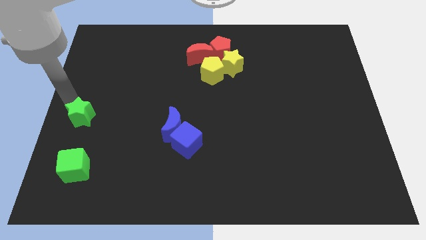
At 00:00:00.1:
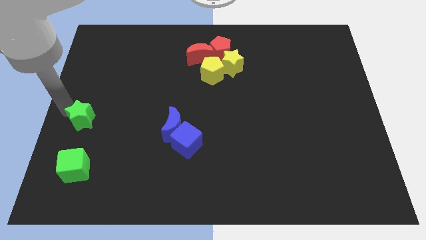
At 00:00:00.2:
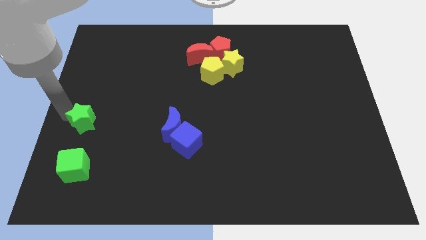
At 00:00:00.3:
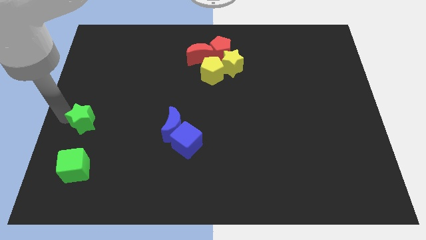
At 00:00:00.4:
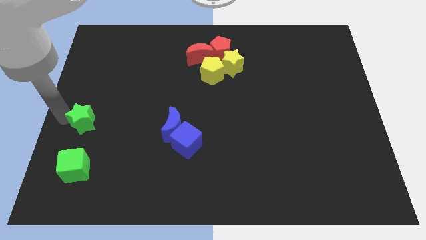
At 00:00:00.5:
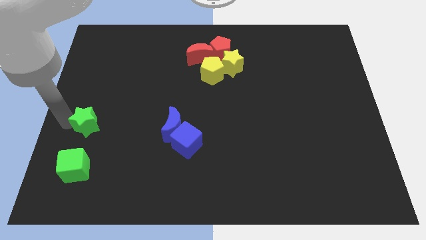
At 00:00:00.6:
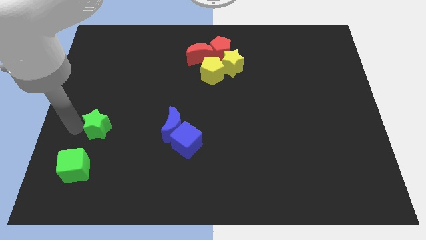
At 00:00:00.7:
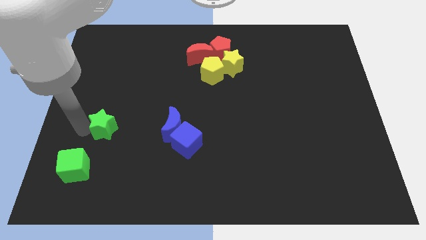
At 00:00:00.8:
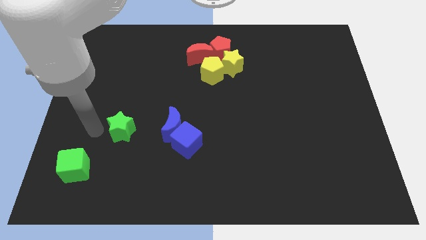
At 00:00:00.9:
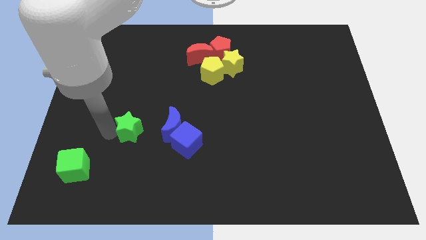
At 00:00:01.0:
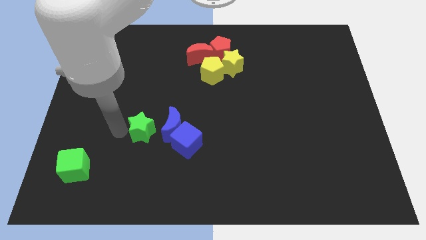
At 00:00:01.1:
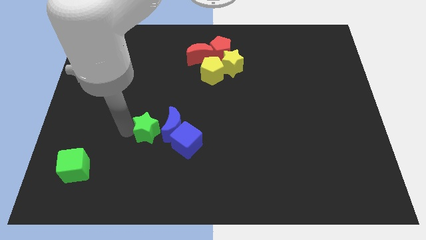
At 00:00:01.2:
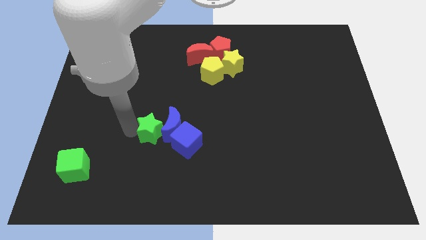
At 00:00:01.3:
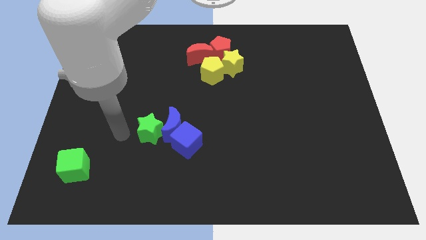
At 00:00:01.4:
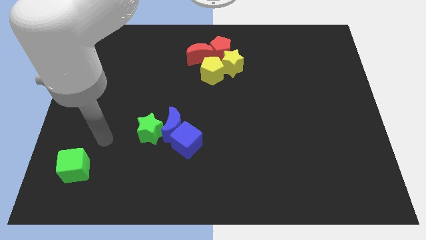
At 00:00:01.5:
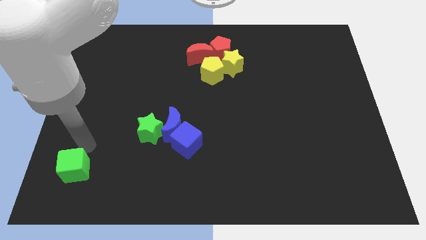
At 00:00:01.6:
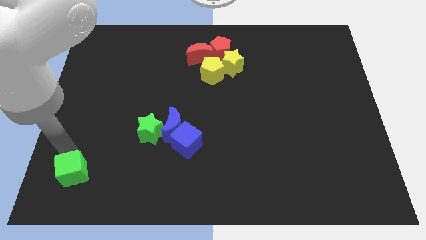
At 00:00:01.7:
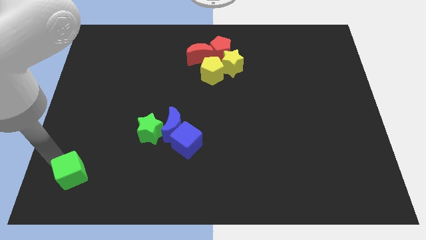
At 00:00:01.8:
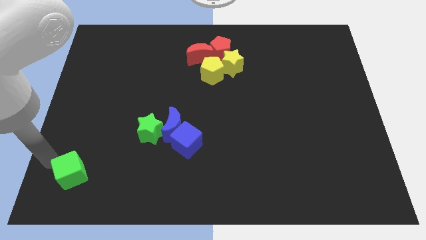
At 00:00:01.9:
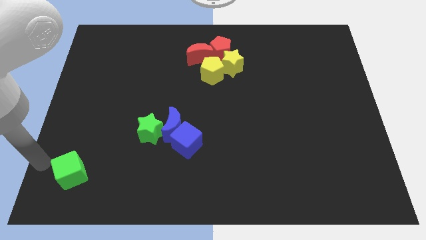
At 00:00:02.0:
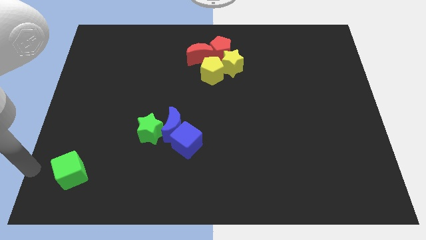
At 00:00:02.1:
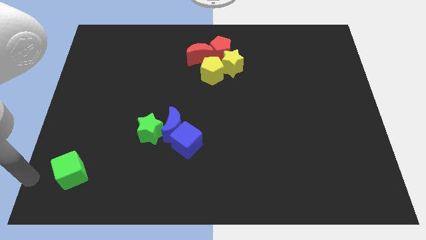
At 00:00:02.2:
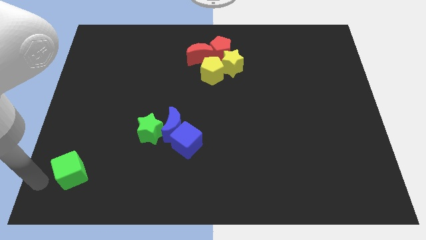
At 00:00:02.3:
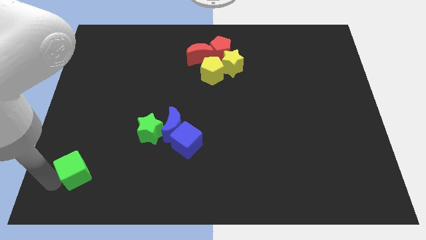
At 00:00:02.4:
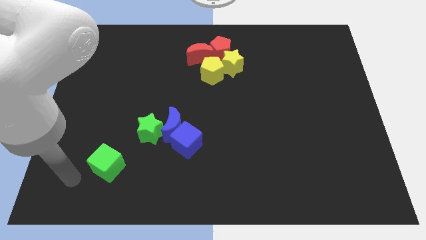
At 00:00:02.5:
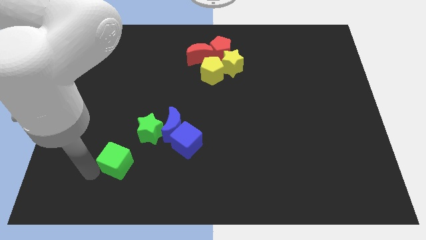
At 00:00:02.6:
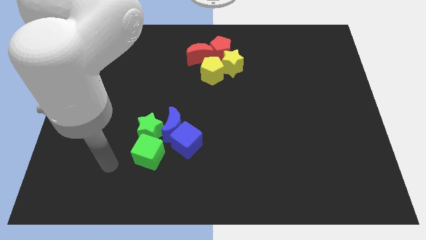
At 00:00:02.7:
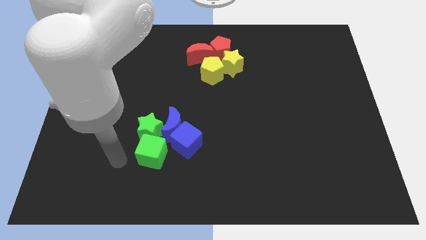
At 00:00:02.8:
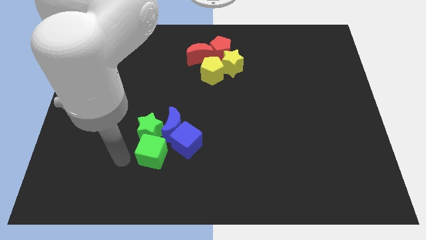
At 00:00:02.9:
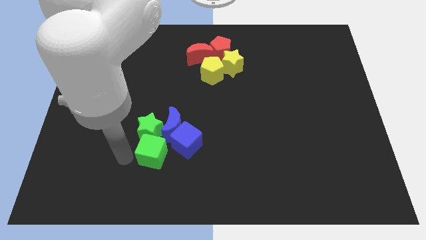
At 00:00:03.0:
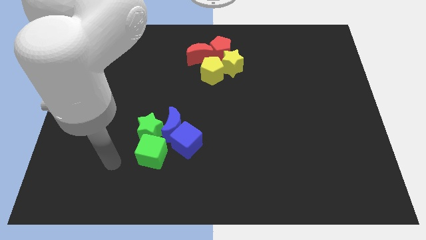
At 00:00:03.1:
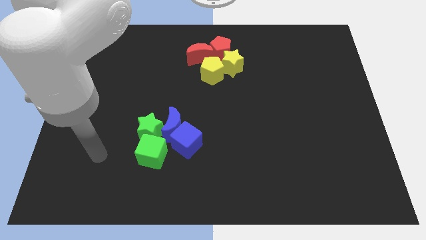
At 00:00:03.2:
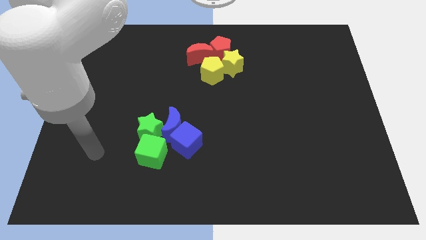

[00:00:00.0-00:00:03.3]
move the green star and green cube to the left of the blue crescent

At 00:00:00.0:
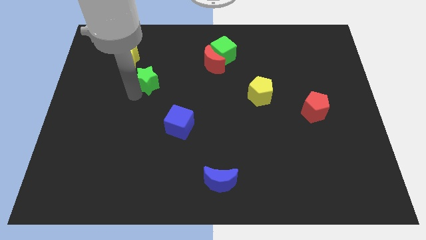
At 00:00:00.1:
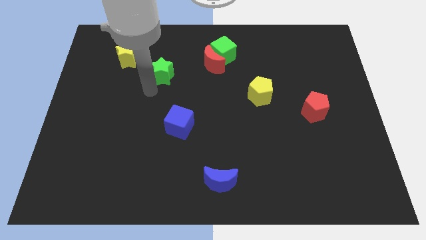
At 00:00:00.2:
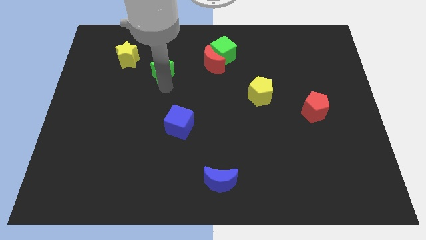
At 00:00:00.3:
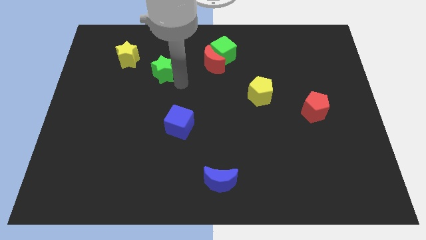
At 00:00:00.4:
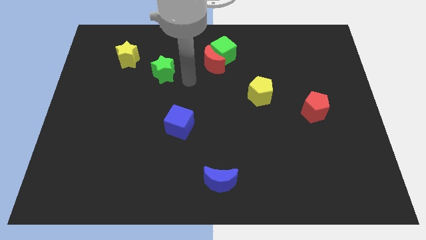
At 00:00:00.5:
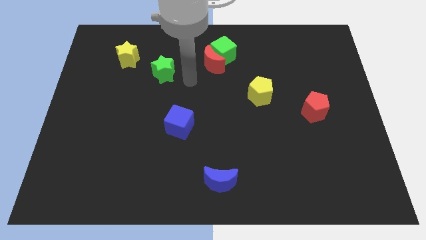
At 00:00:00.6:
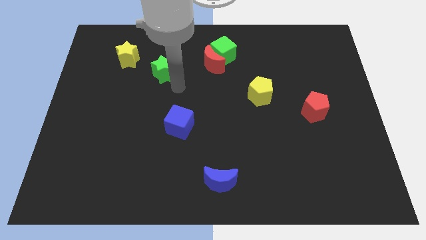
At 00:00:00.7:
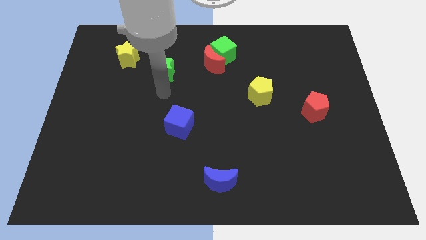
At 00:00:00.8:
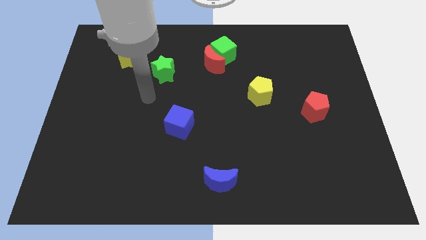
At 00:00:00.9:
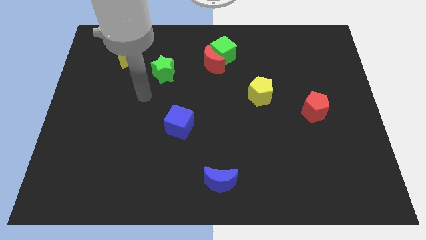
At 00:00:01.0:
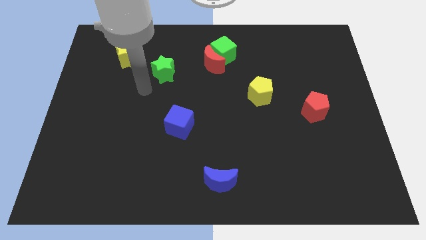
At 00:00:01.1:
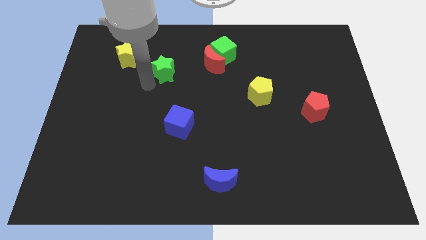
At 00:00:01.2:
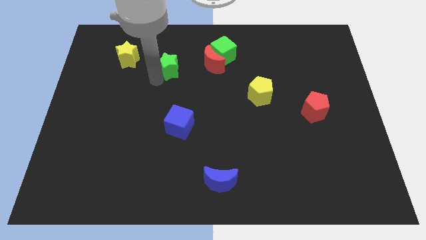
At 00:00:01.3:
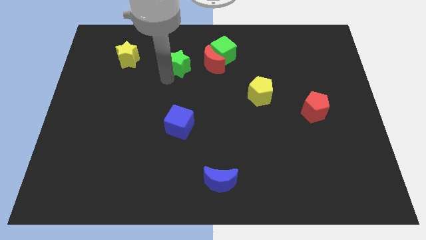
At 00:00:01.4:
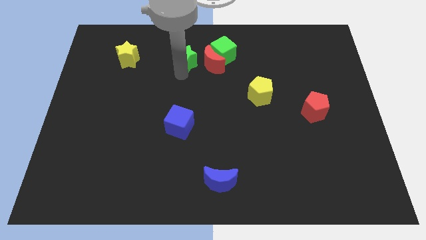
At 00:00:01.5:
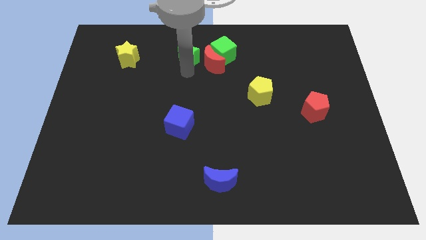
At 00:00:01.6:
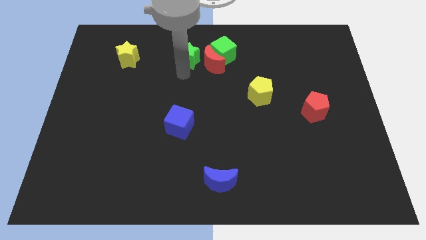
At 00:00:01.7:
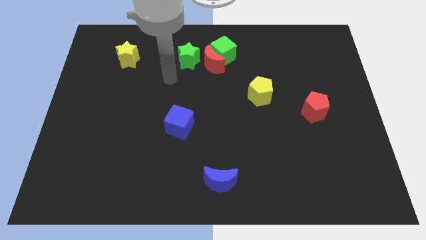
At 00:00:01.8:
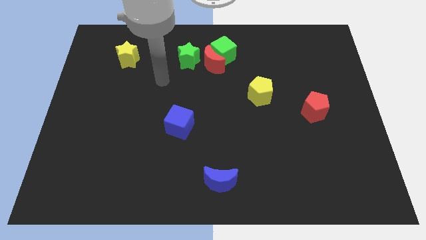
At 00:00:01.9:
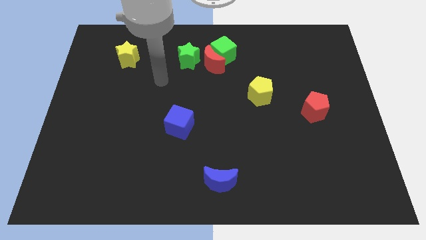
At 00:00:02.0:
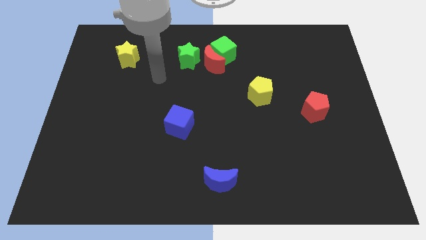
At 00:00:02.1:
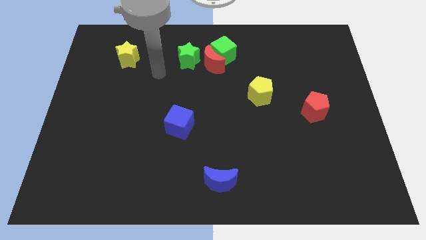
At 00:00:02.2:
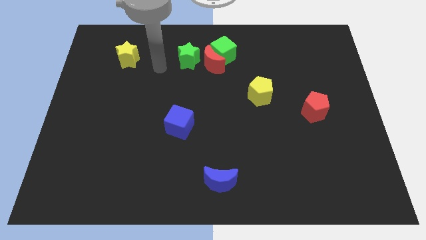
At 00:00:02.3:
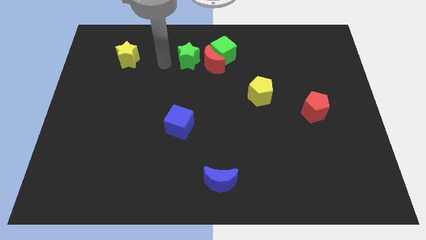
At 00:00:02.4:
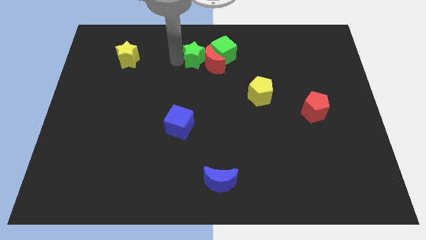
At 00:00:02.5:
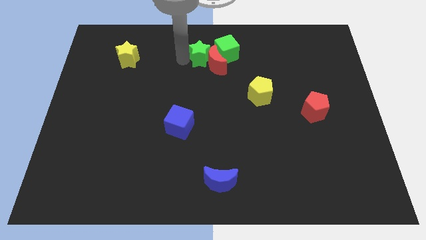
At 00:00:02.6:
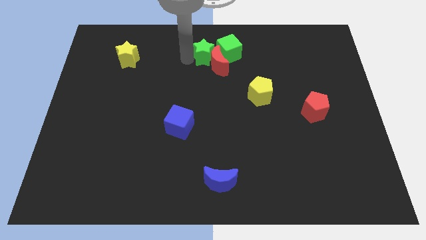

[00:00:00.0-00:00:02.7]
push the green star into the green cube

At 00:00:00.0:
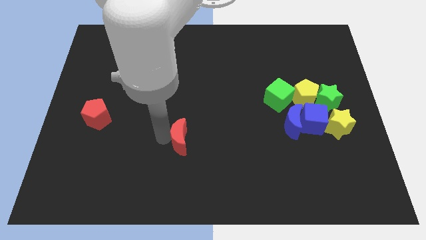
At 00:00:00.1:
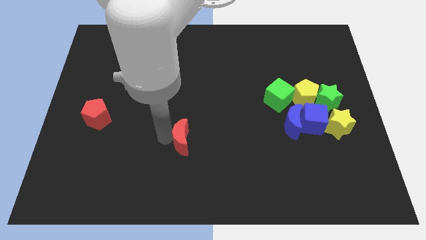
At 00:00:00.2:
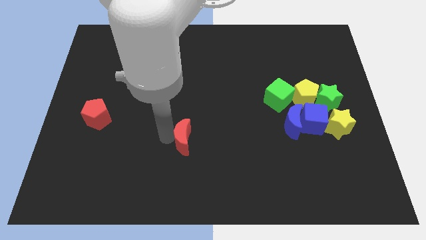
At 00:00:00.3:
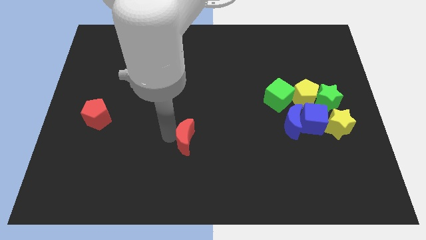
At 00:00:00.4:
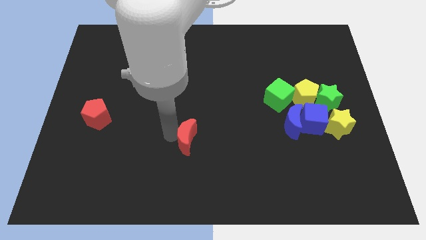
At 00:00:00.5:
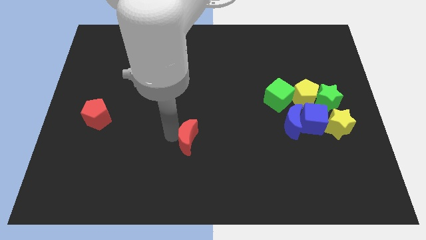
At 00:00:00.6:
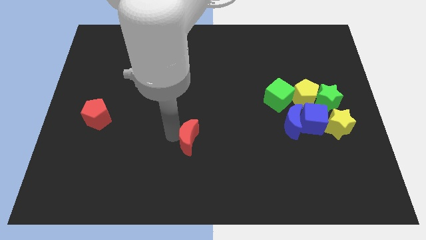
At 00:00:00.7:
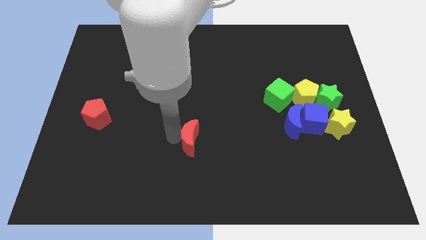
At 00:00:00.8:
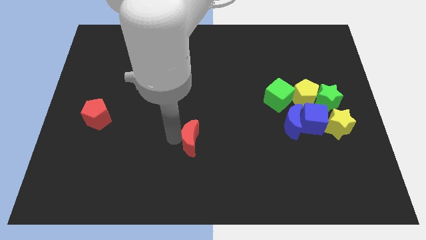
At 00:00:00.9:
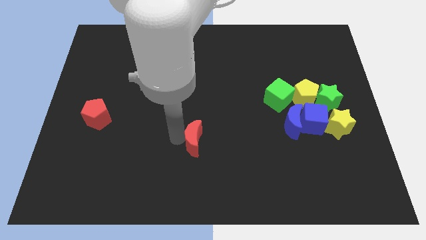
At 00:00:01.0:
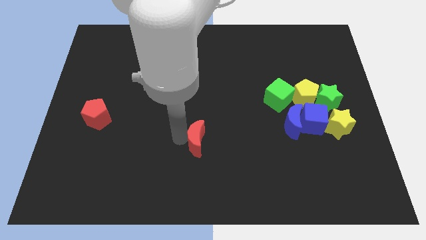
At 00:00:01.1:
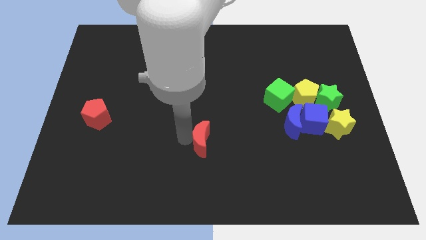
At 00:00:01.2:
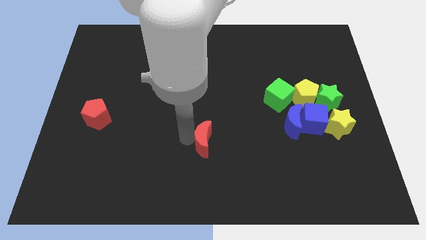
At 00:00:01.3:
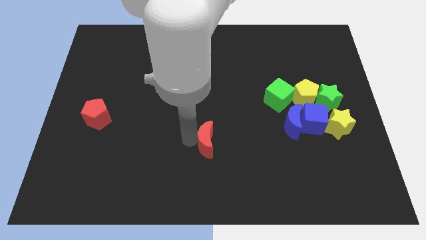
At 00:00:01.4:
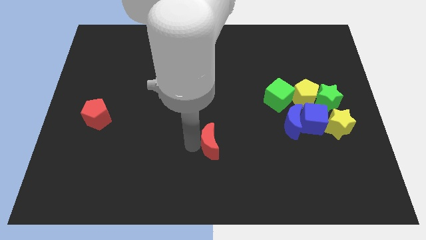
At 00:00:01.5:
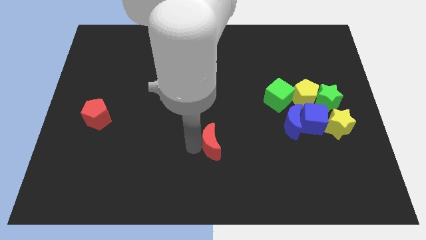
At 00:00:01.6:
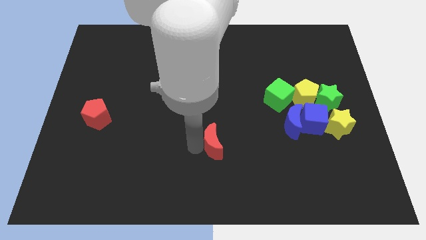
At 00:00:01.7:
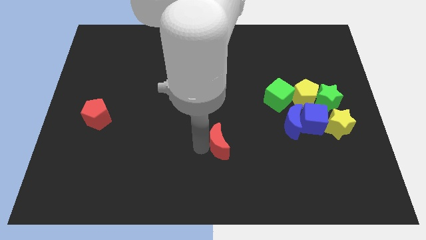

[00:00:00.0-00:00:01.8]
move the red crescent to the right of the board

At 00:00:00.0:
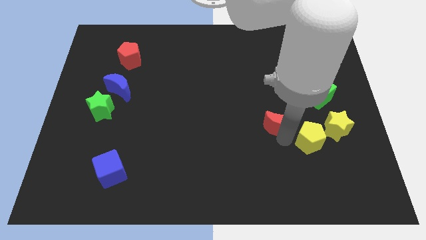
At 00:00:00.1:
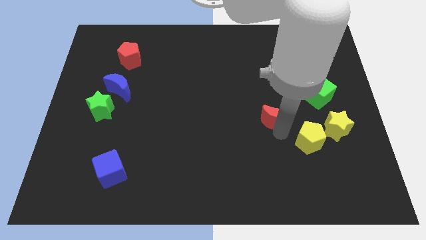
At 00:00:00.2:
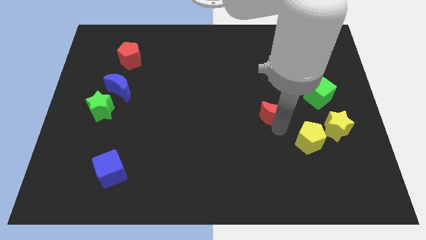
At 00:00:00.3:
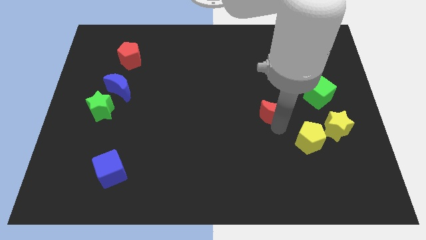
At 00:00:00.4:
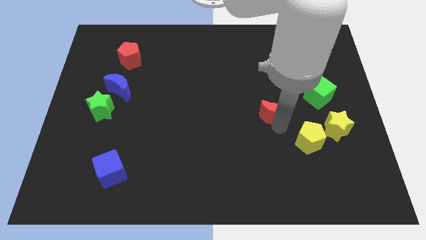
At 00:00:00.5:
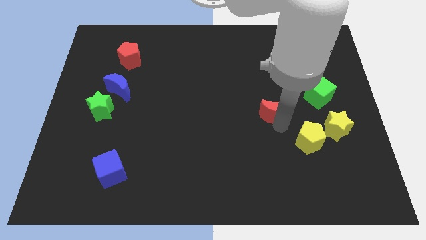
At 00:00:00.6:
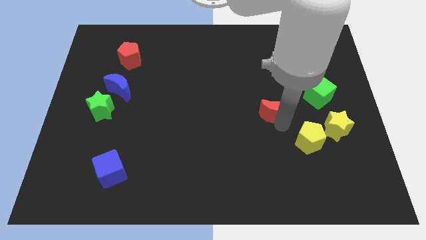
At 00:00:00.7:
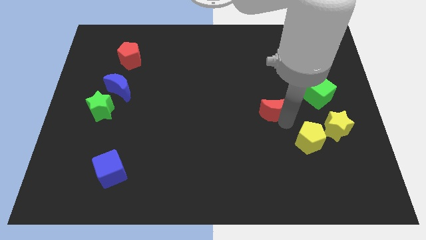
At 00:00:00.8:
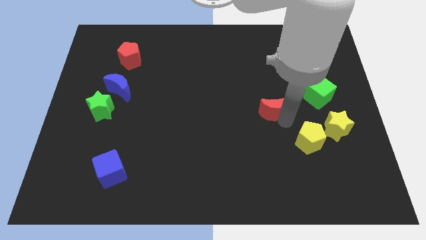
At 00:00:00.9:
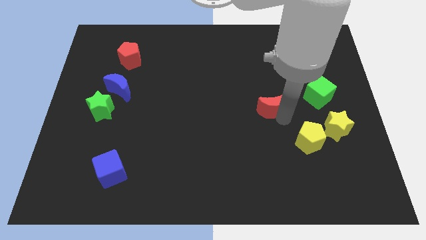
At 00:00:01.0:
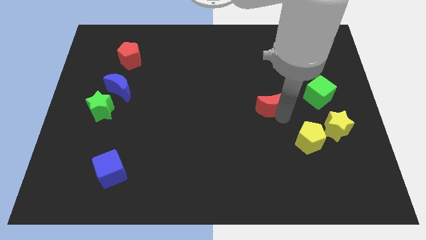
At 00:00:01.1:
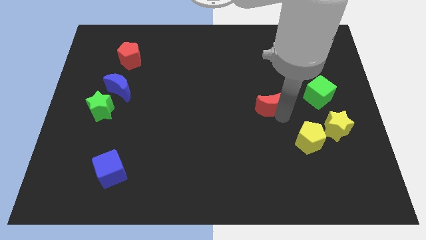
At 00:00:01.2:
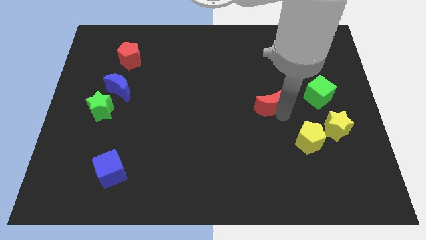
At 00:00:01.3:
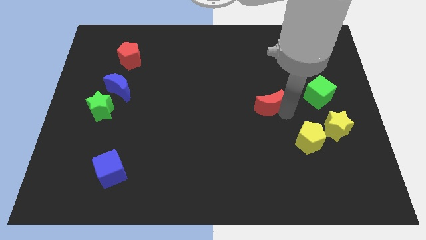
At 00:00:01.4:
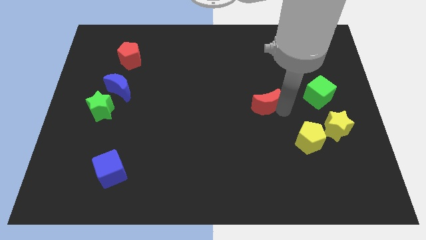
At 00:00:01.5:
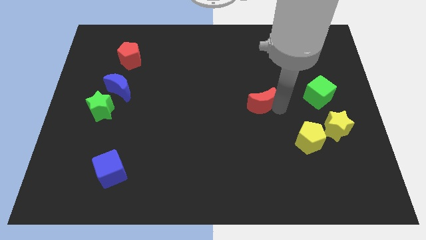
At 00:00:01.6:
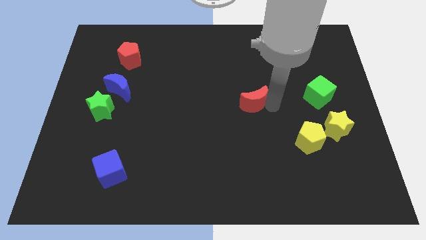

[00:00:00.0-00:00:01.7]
move the red crescent away from the yellow pentagon
